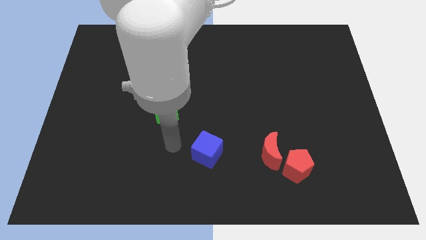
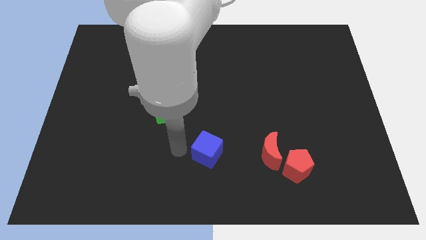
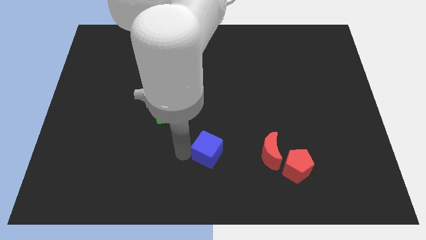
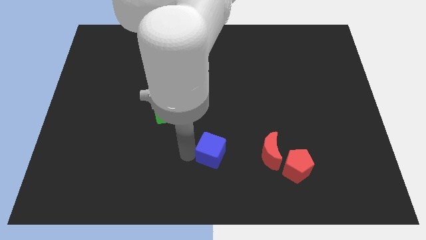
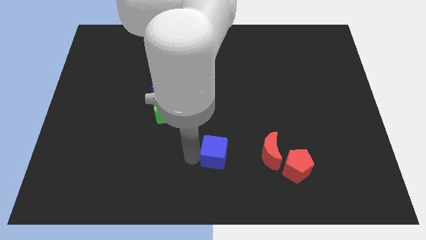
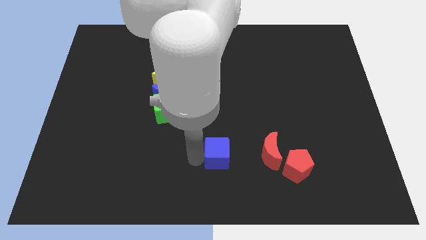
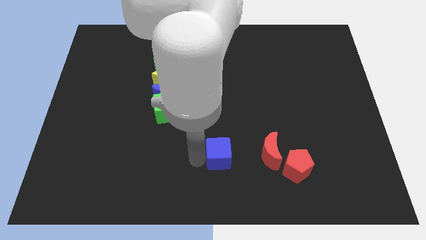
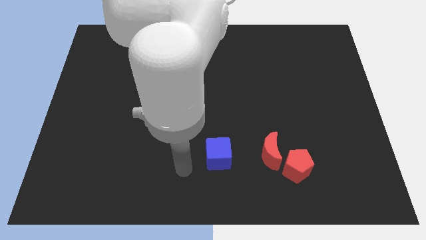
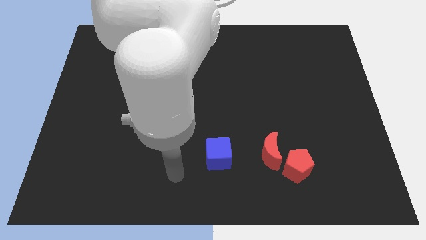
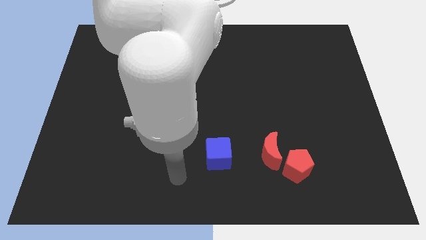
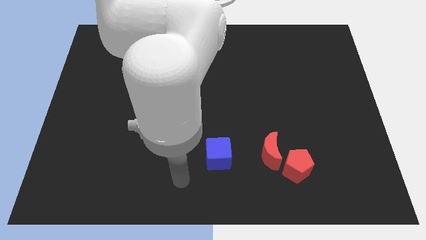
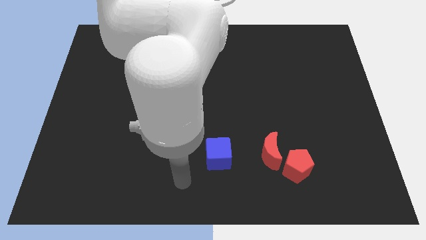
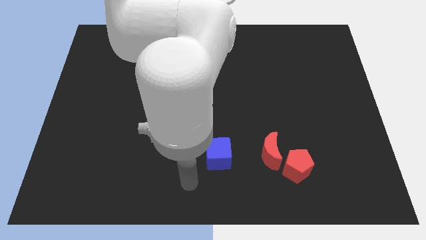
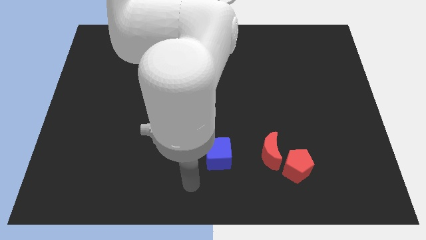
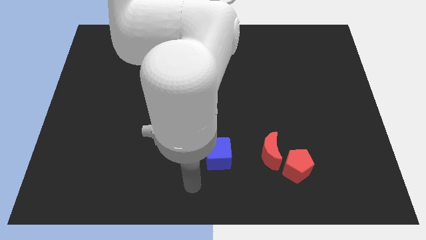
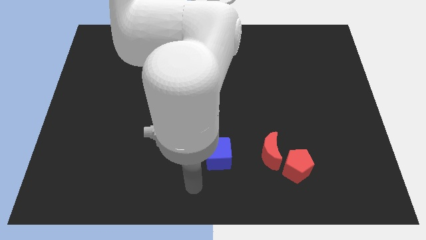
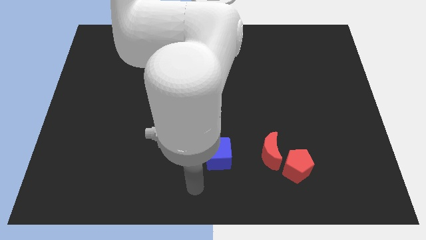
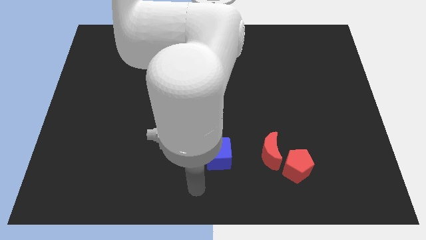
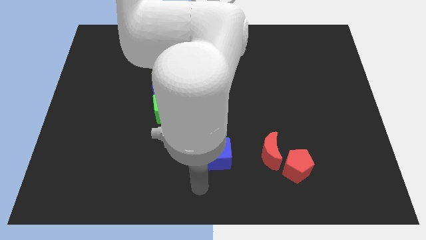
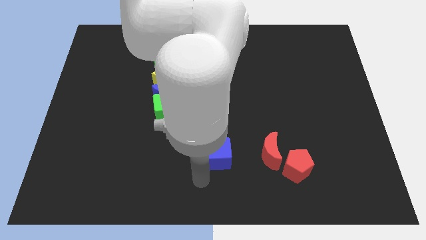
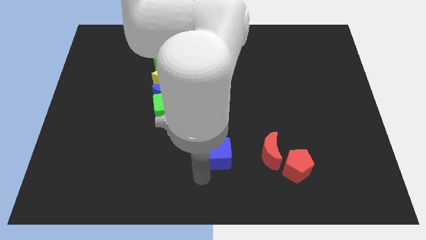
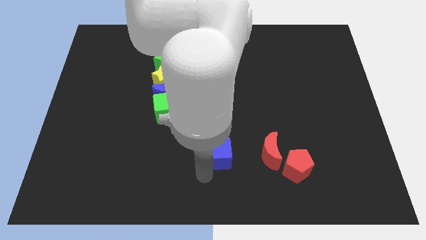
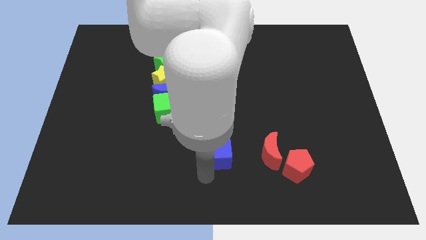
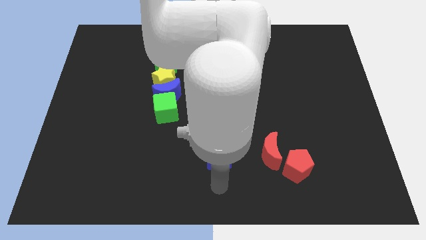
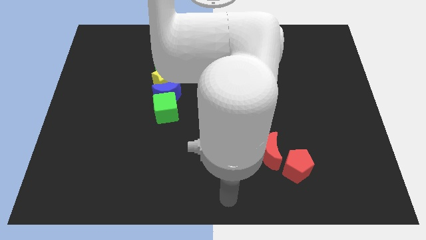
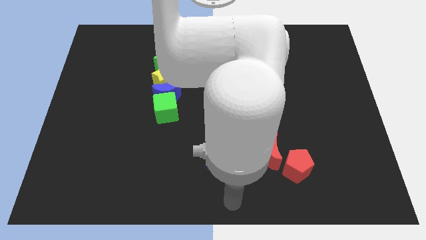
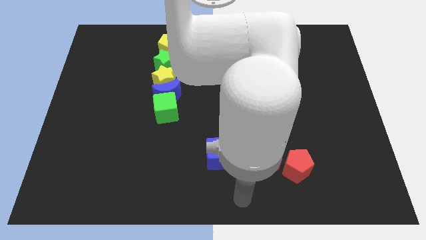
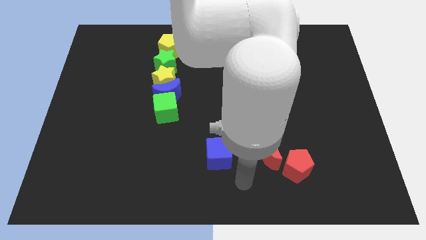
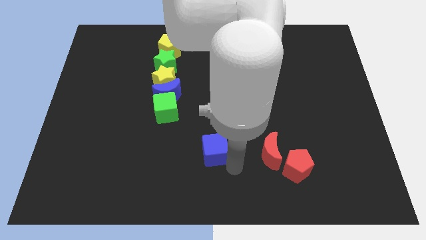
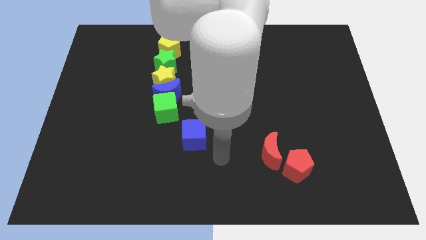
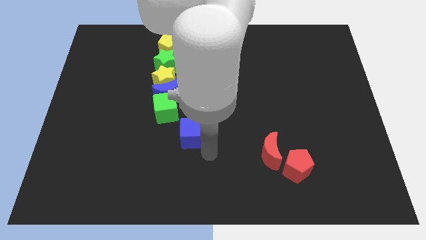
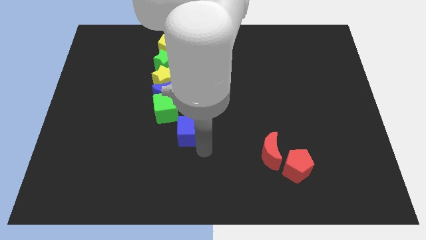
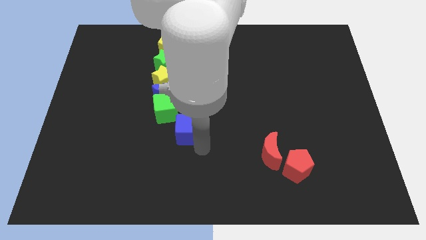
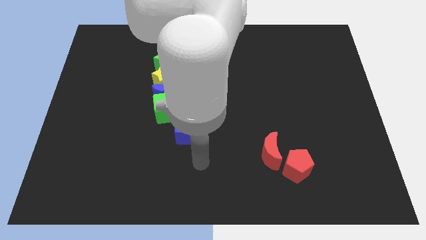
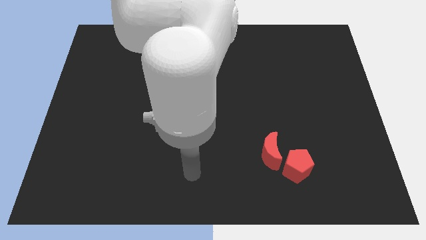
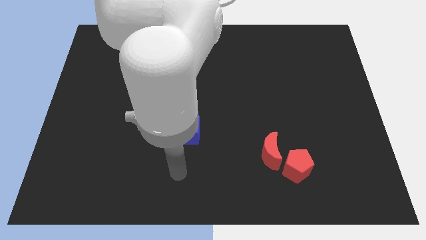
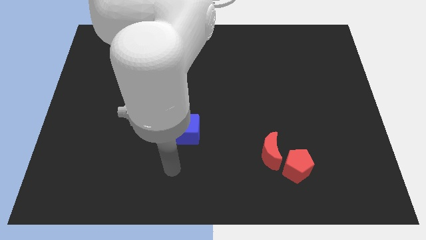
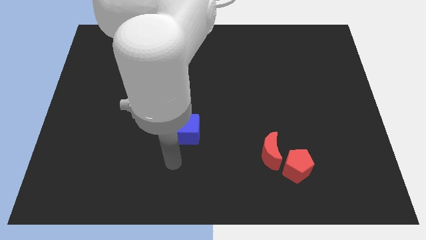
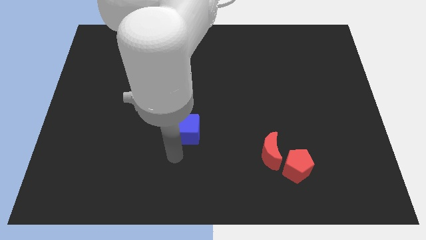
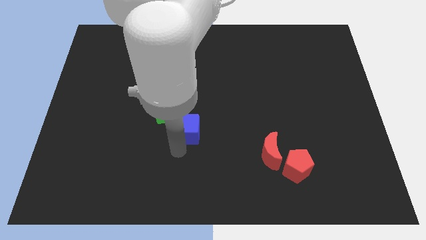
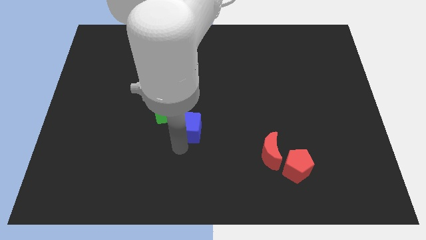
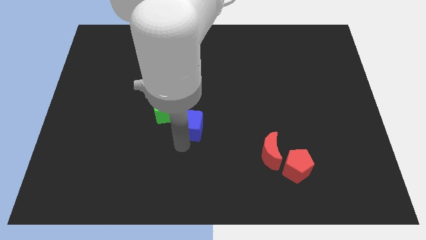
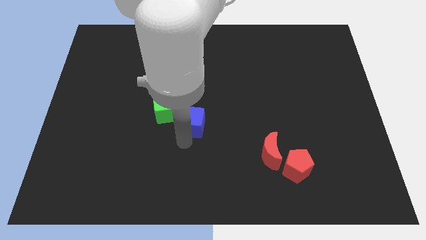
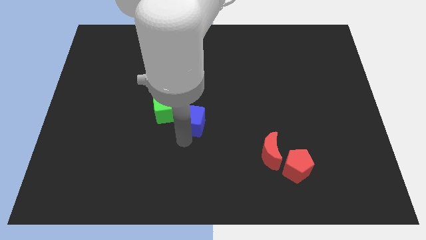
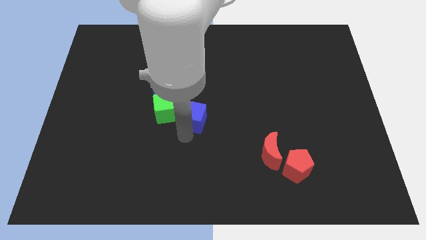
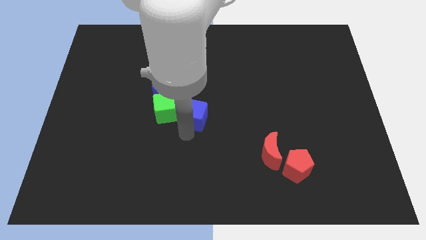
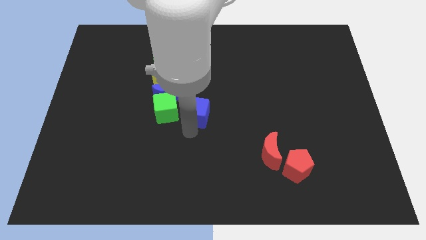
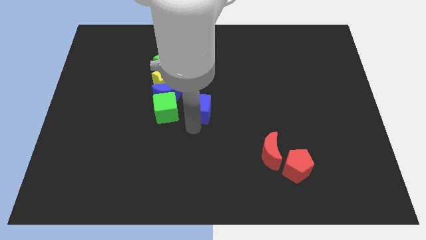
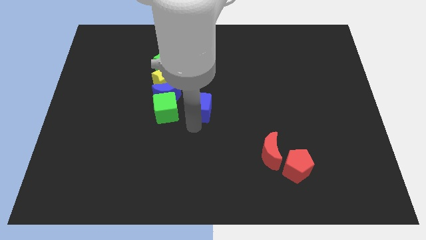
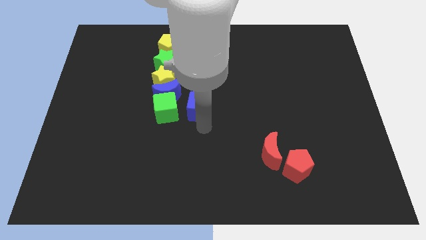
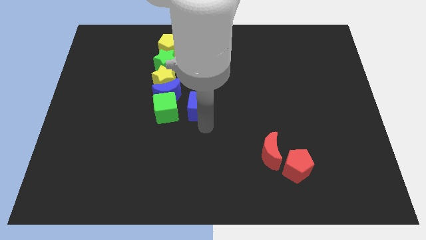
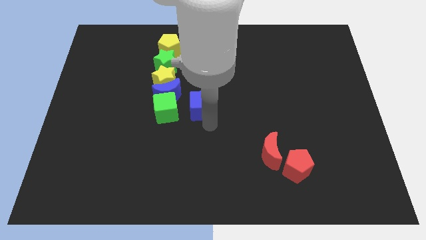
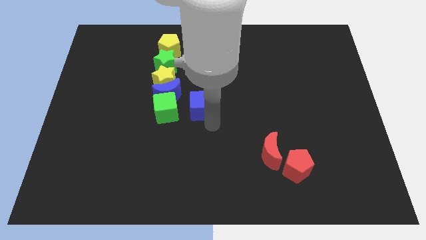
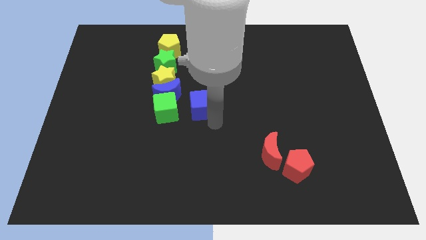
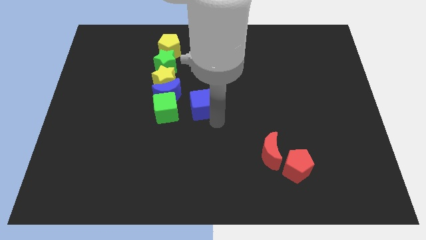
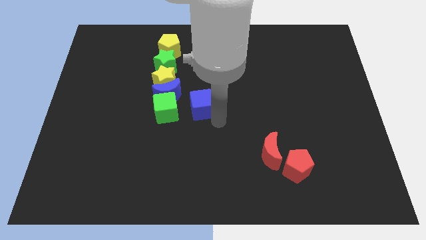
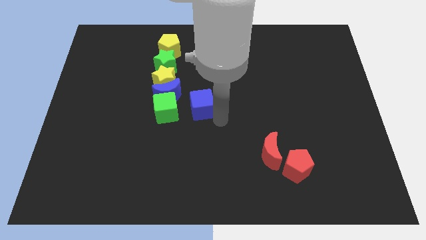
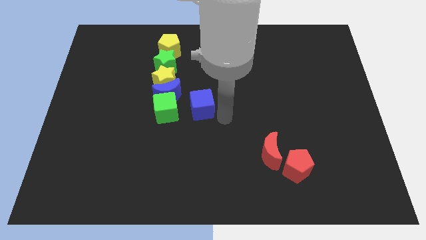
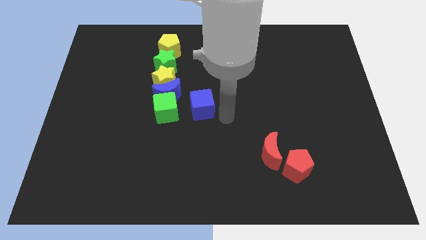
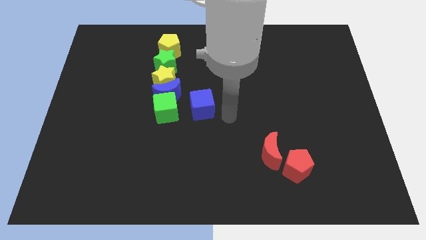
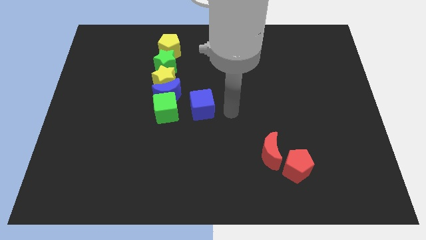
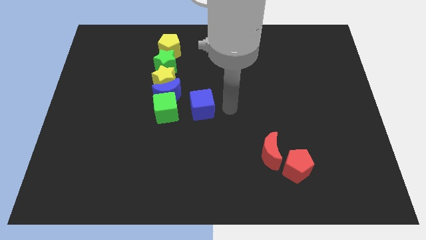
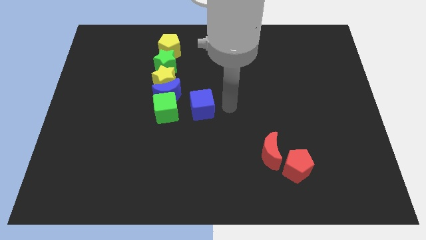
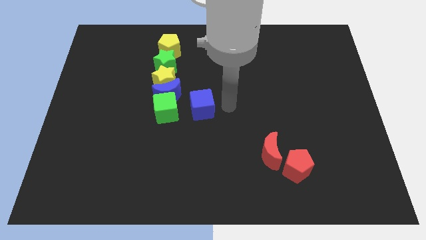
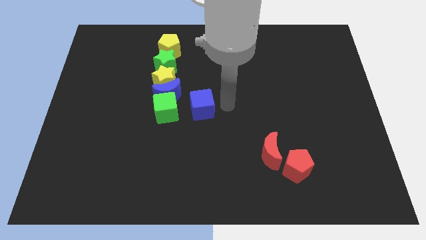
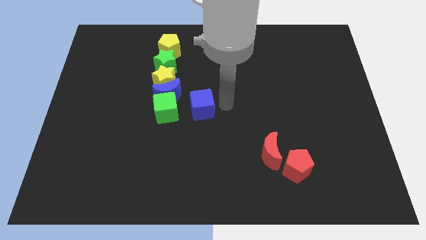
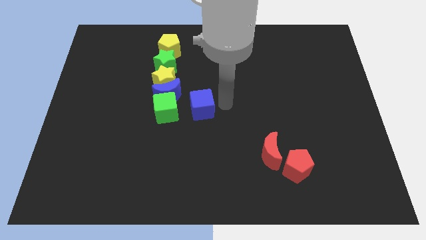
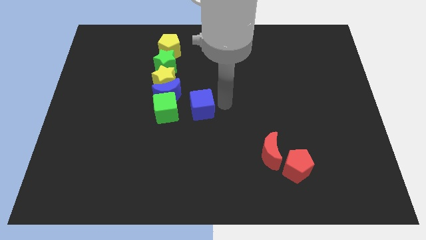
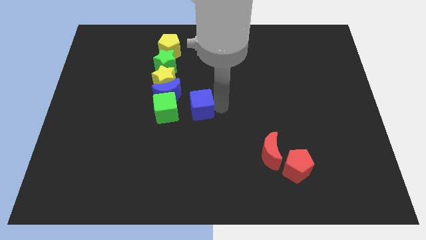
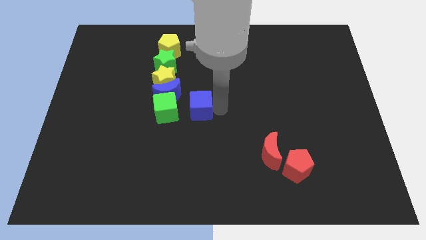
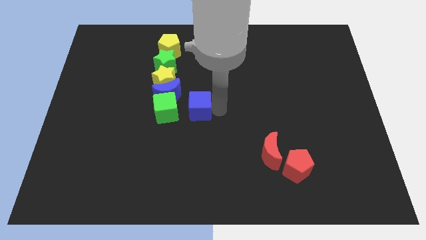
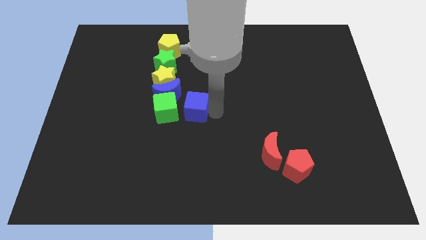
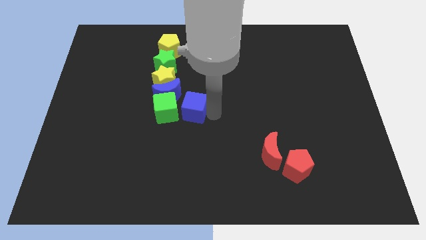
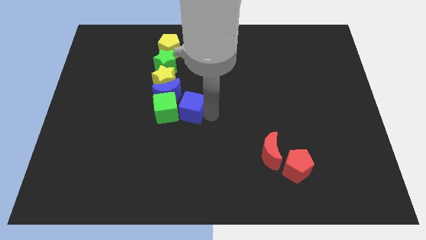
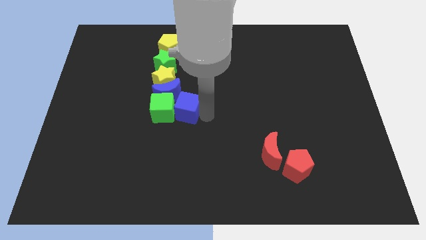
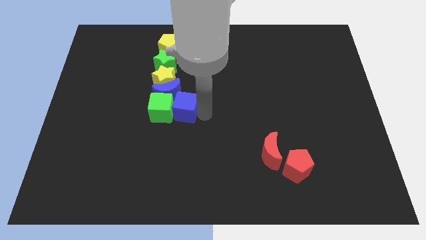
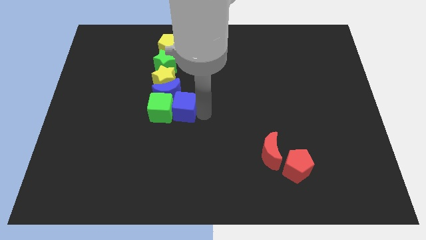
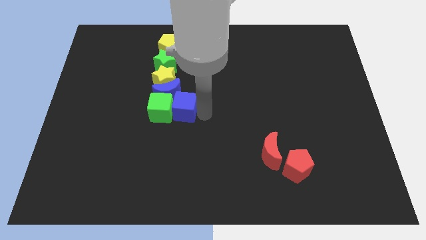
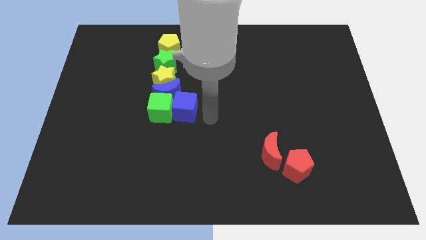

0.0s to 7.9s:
push the blue cube into the green cube

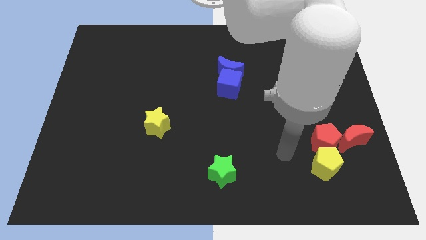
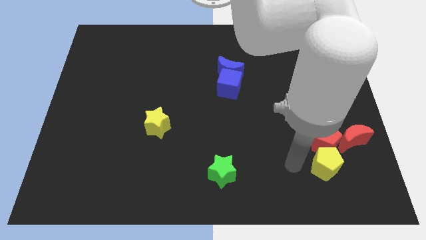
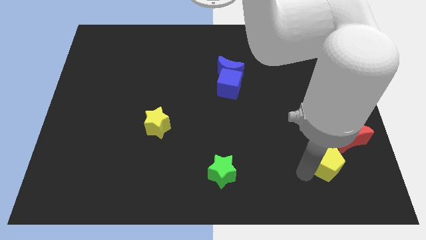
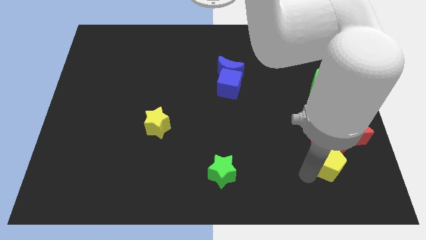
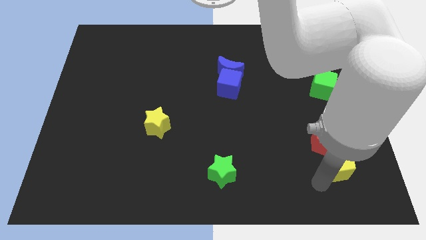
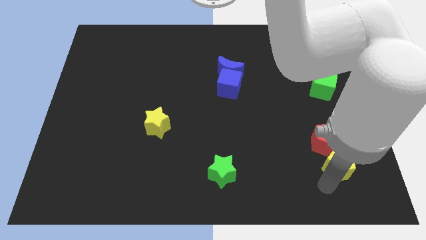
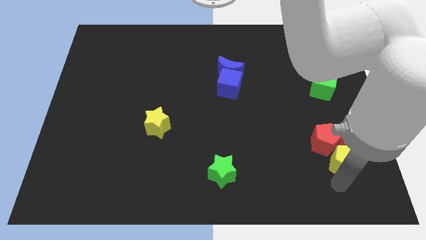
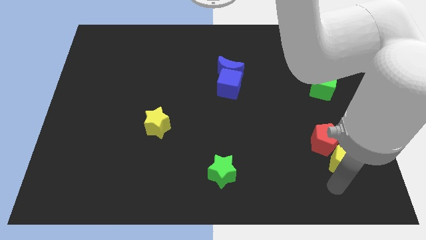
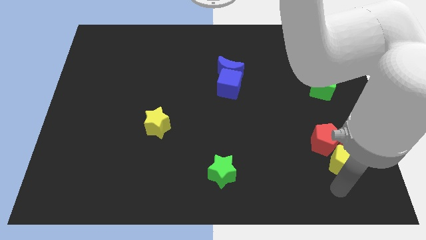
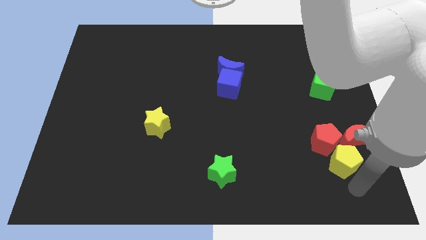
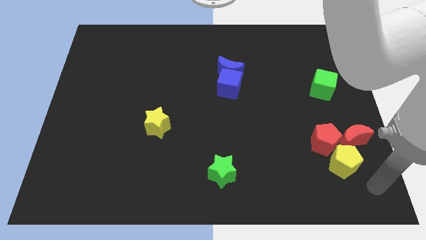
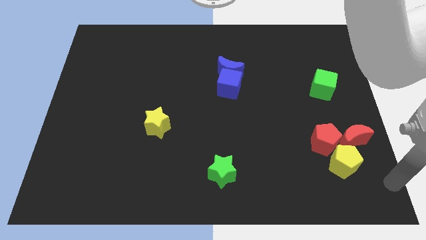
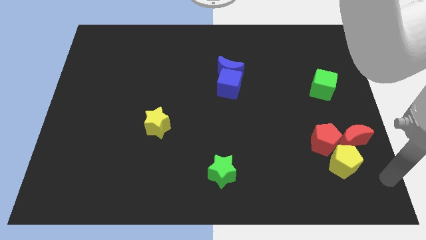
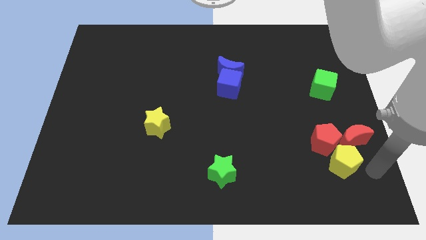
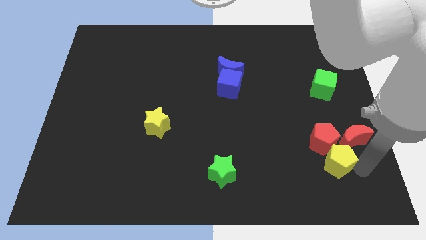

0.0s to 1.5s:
slightly change the position of yellow block to form a group
